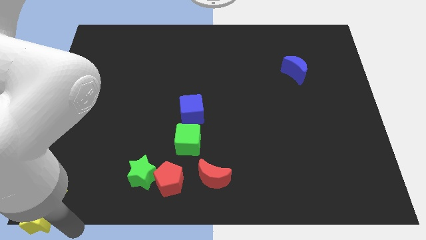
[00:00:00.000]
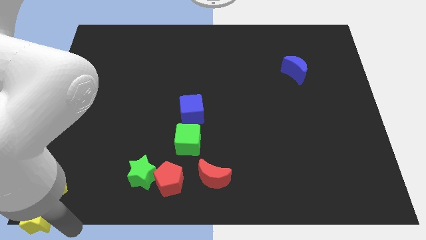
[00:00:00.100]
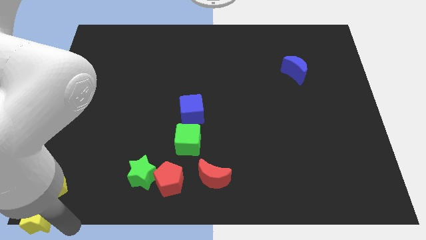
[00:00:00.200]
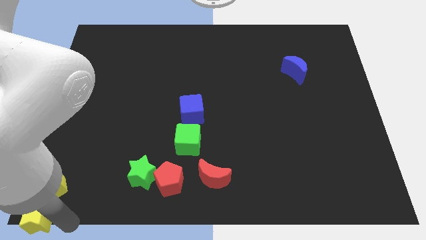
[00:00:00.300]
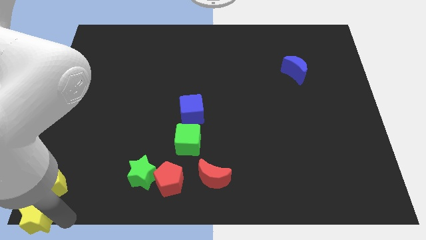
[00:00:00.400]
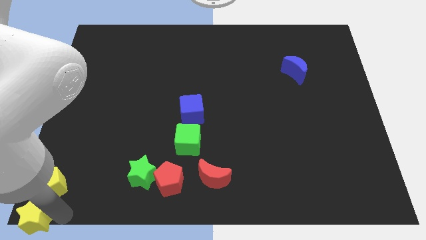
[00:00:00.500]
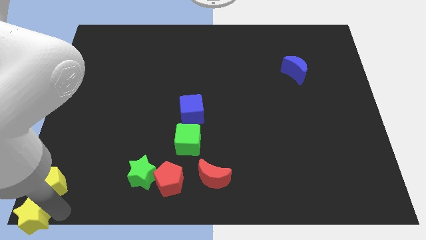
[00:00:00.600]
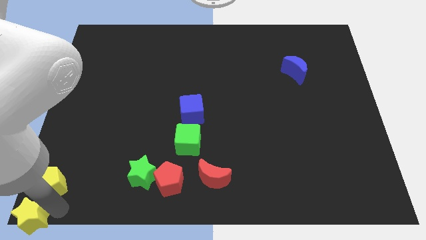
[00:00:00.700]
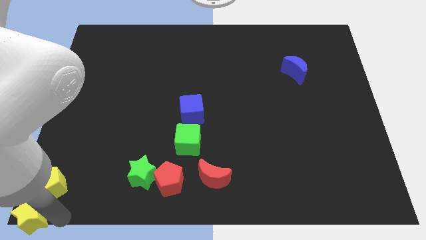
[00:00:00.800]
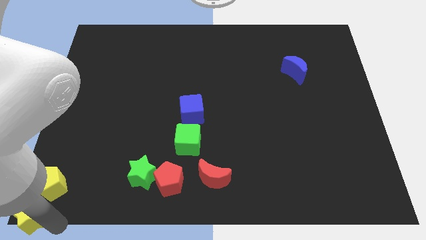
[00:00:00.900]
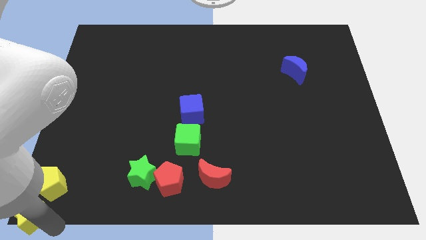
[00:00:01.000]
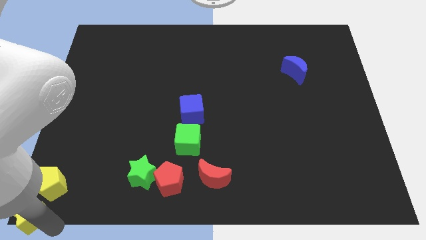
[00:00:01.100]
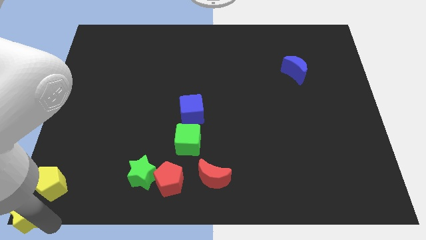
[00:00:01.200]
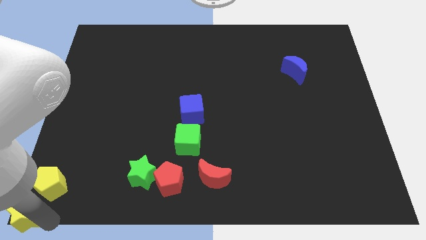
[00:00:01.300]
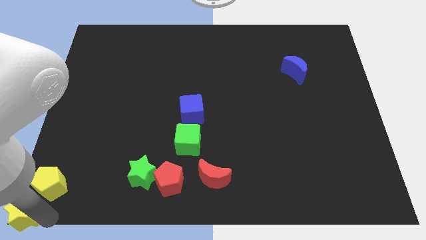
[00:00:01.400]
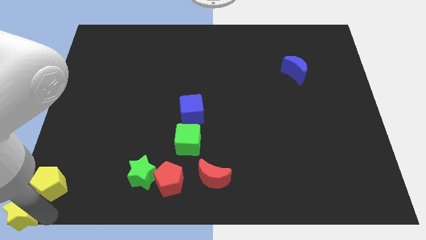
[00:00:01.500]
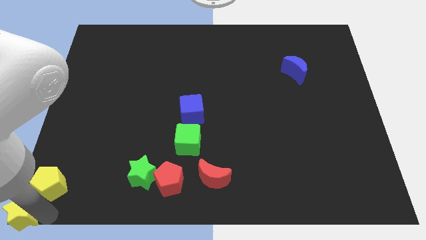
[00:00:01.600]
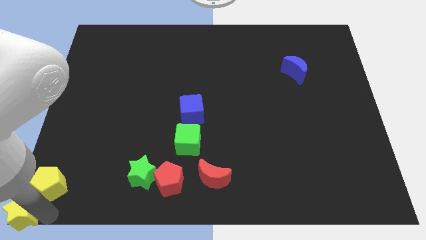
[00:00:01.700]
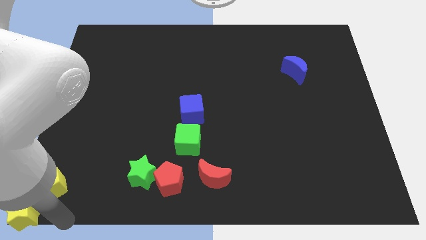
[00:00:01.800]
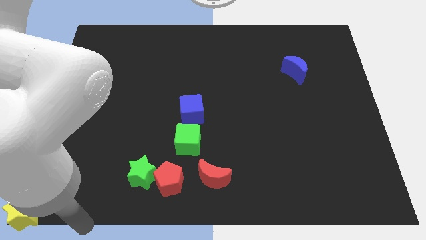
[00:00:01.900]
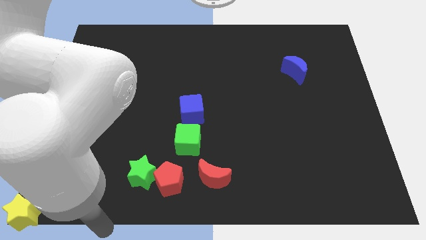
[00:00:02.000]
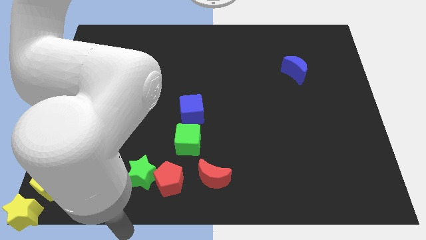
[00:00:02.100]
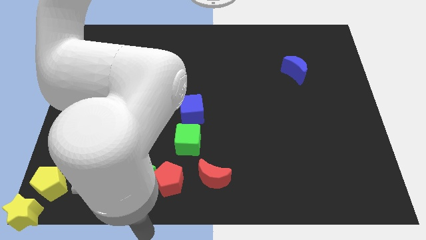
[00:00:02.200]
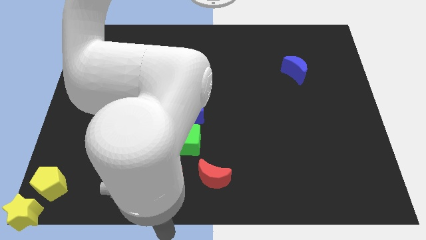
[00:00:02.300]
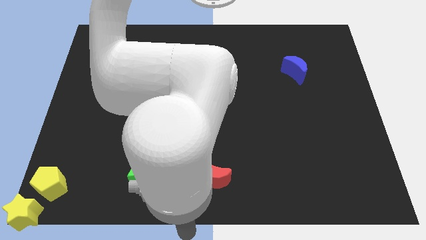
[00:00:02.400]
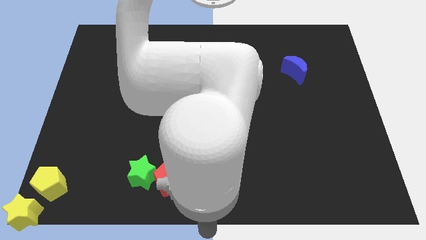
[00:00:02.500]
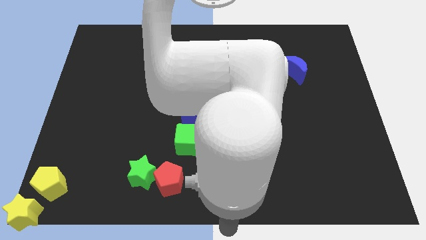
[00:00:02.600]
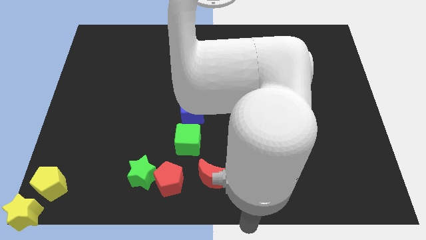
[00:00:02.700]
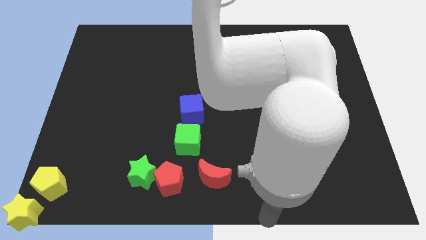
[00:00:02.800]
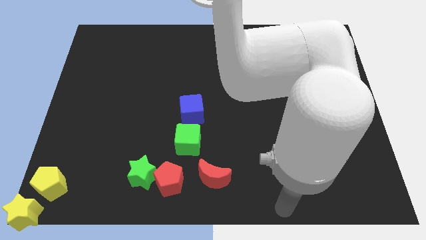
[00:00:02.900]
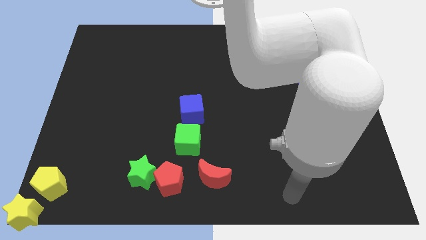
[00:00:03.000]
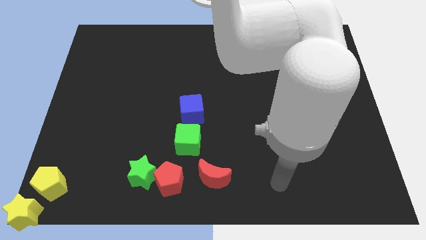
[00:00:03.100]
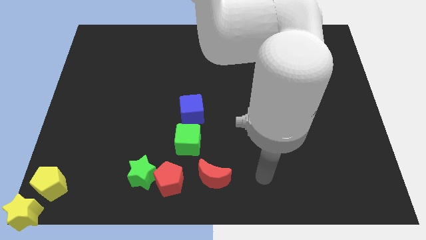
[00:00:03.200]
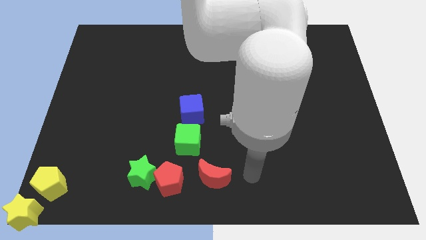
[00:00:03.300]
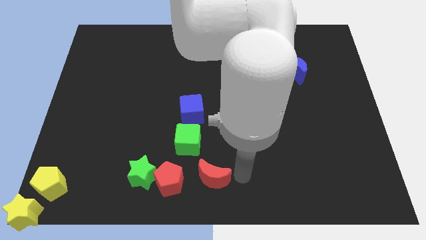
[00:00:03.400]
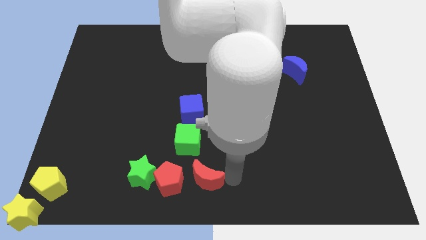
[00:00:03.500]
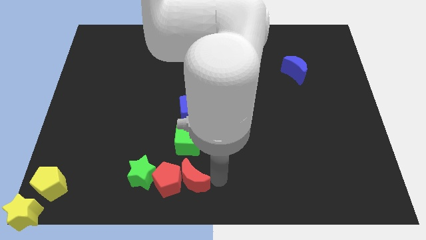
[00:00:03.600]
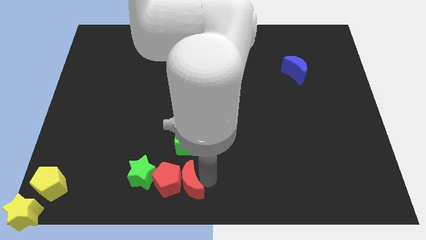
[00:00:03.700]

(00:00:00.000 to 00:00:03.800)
push the red moon into the red pentagon

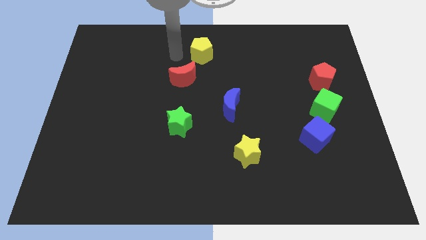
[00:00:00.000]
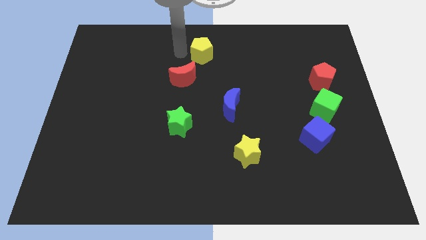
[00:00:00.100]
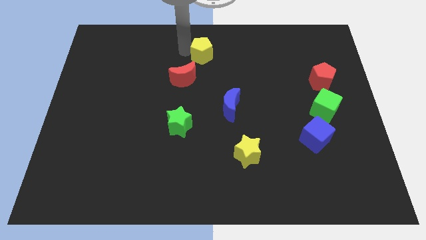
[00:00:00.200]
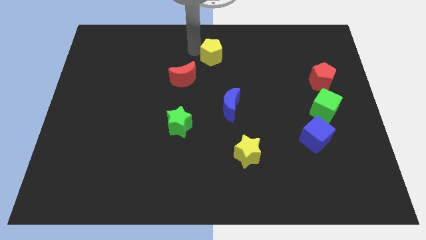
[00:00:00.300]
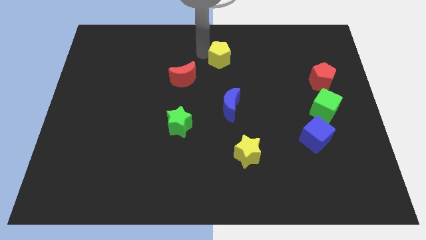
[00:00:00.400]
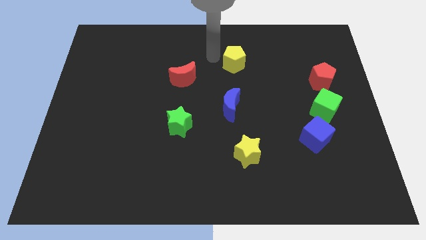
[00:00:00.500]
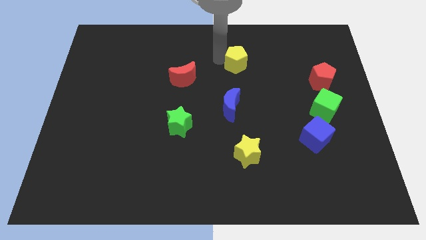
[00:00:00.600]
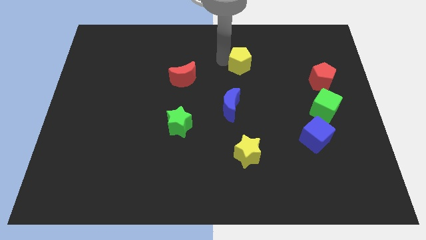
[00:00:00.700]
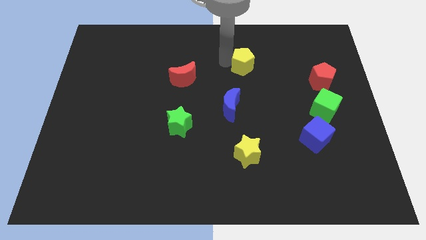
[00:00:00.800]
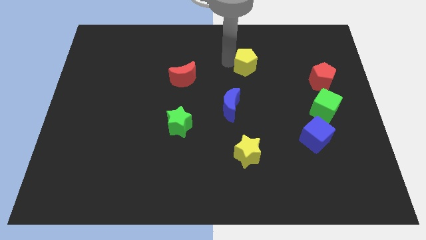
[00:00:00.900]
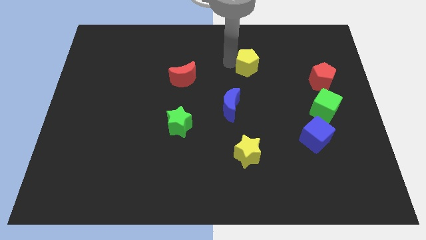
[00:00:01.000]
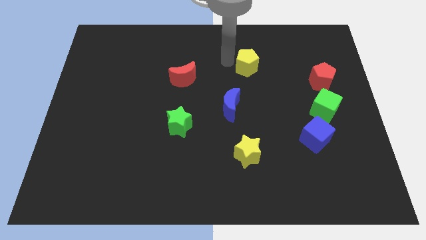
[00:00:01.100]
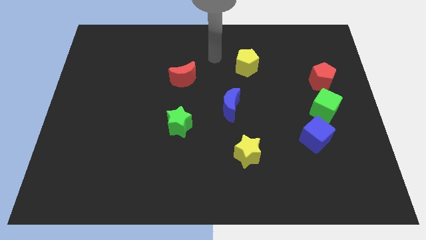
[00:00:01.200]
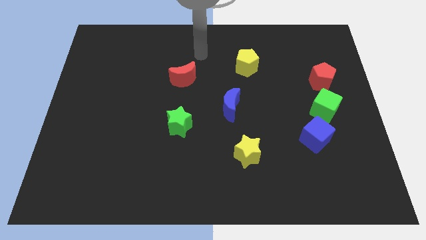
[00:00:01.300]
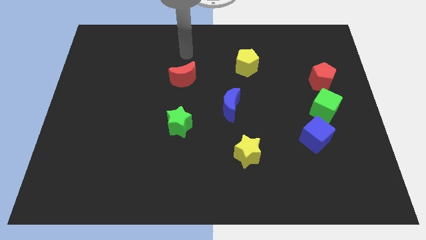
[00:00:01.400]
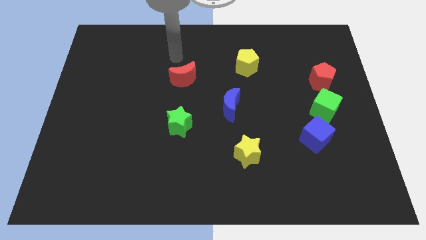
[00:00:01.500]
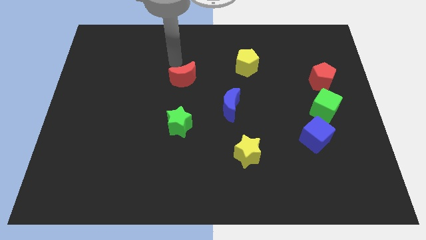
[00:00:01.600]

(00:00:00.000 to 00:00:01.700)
move the yellow pentagon slightly to the right side of the board

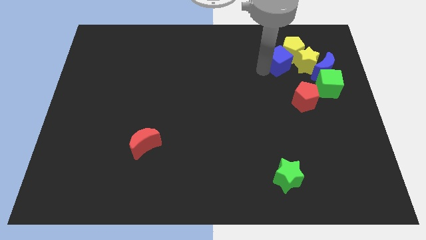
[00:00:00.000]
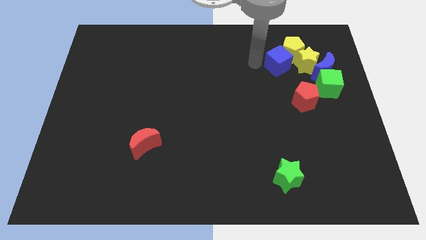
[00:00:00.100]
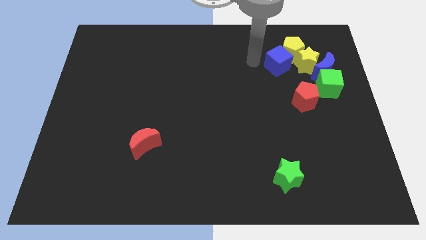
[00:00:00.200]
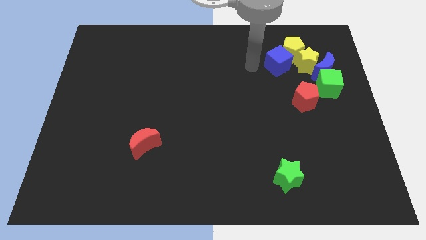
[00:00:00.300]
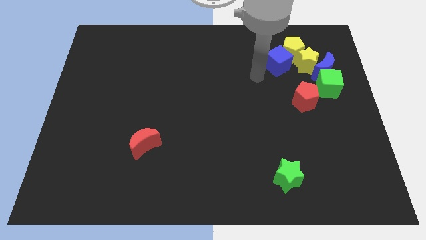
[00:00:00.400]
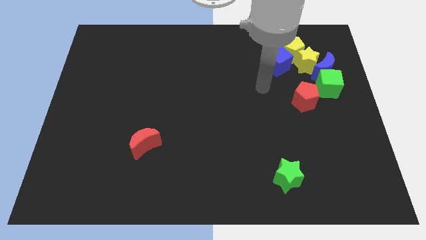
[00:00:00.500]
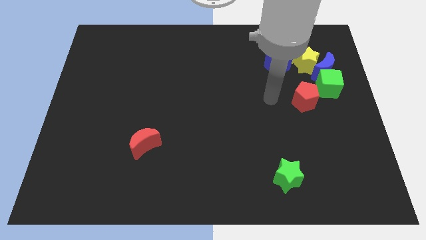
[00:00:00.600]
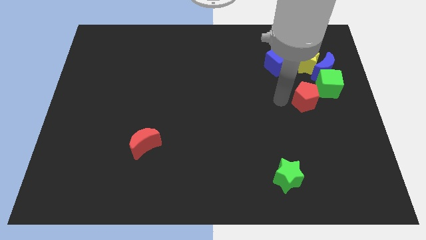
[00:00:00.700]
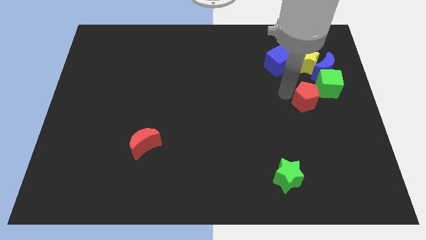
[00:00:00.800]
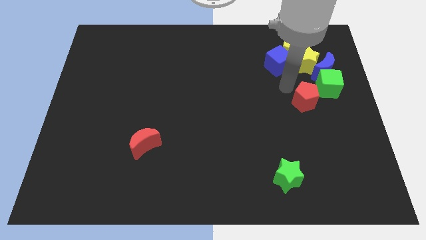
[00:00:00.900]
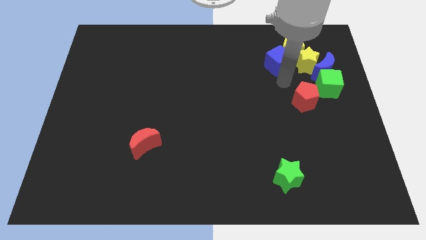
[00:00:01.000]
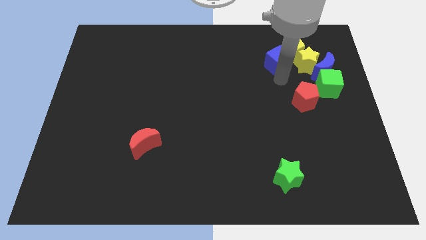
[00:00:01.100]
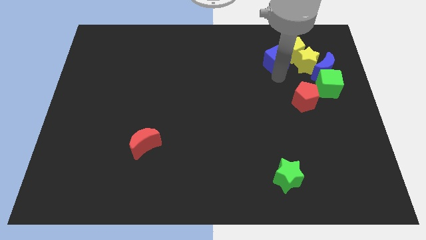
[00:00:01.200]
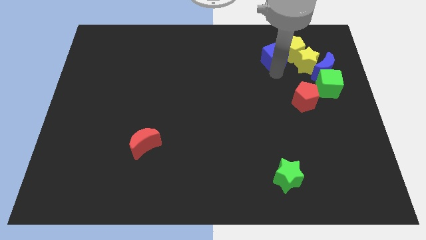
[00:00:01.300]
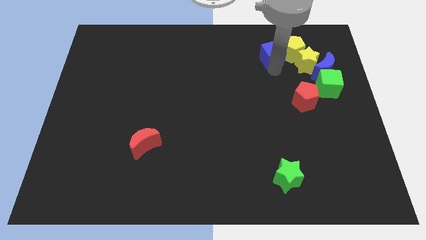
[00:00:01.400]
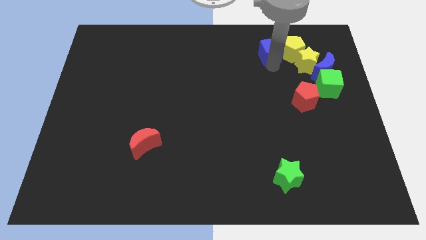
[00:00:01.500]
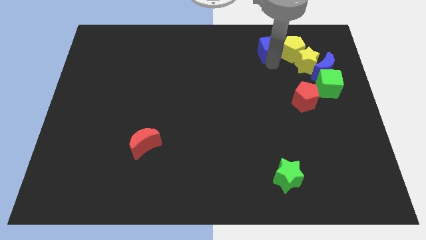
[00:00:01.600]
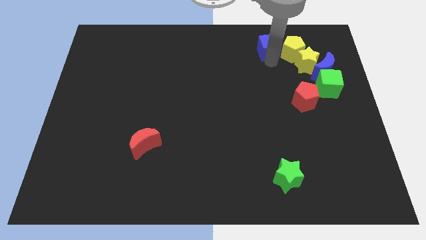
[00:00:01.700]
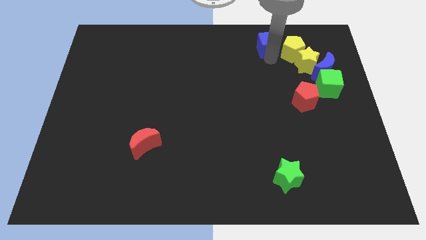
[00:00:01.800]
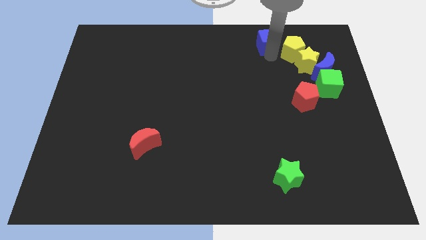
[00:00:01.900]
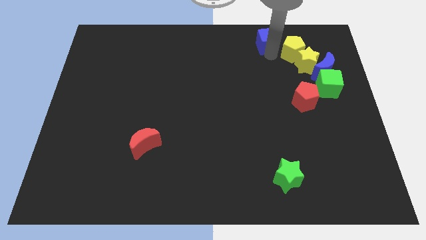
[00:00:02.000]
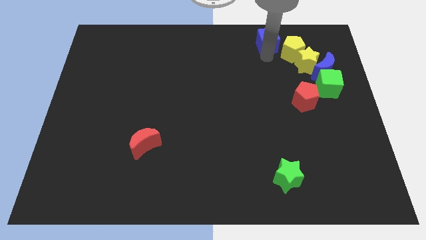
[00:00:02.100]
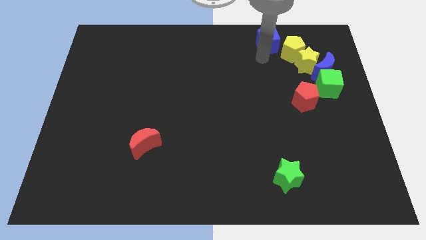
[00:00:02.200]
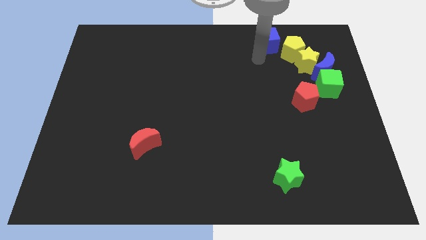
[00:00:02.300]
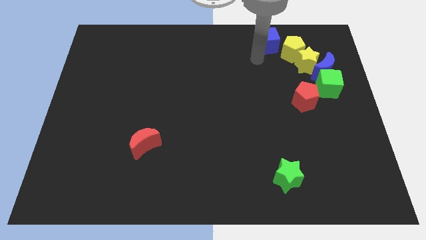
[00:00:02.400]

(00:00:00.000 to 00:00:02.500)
move the blue cube to the top

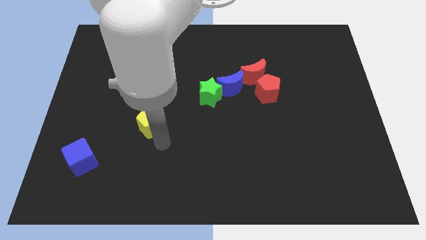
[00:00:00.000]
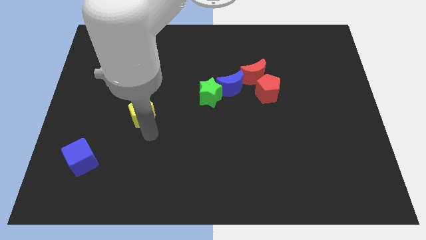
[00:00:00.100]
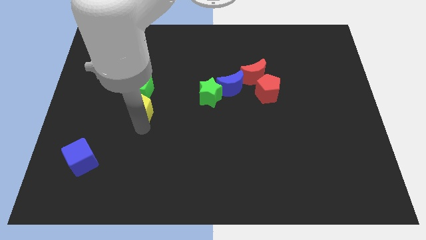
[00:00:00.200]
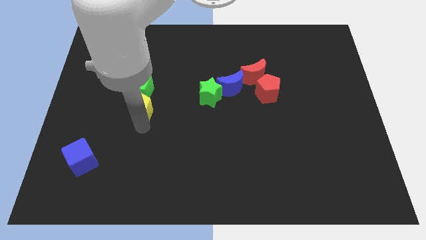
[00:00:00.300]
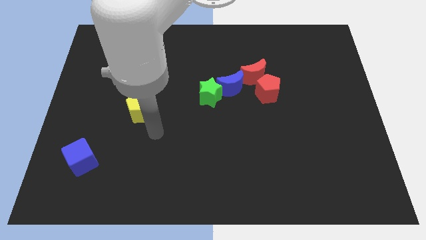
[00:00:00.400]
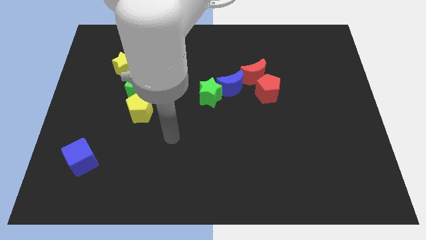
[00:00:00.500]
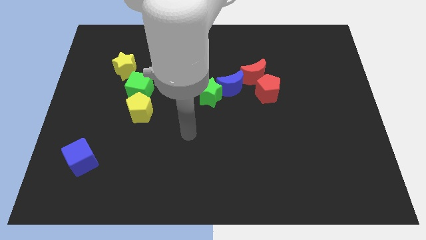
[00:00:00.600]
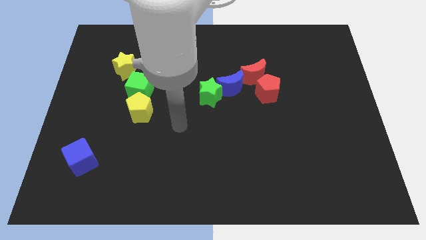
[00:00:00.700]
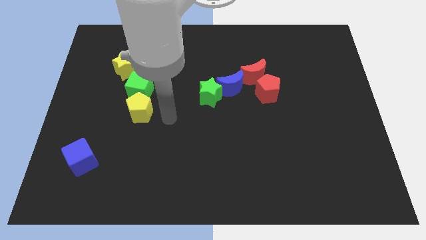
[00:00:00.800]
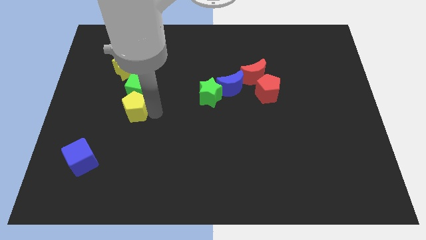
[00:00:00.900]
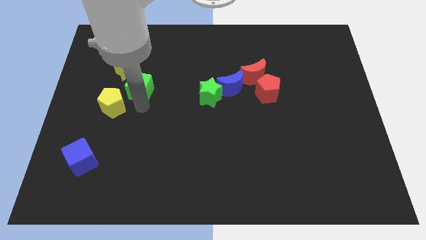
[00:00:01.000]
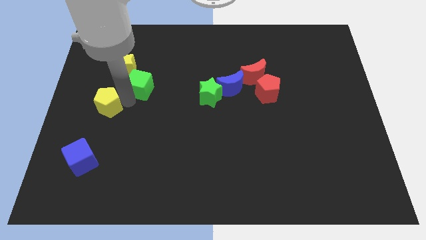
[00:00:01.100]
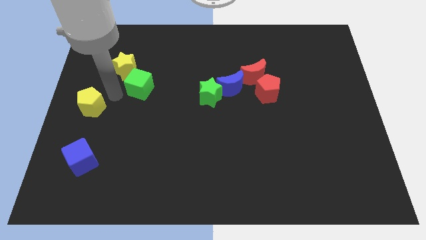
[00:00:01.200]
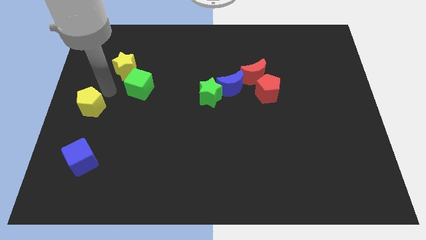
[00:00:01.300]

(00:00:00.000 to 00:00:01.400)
move the yellow pentagon to the bottom left of the green cube
